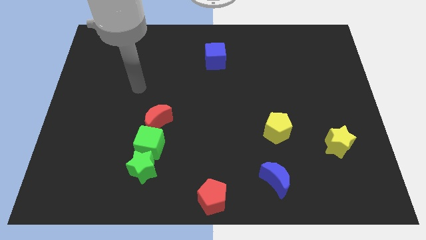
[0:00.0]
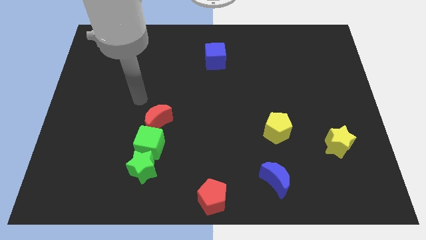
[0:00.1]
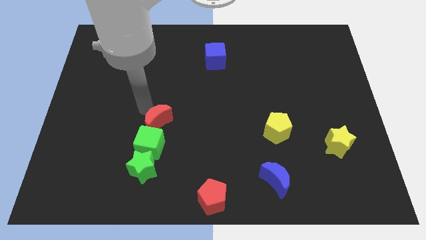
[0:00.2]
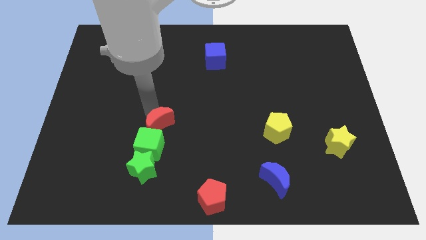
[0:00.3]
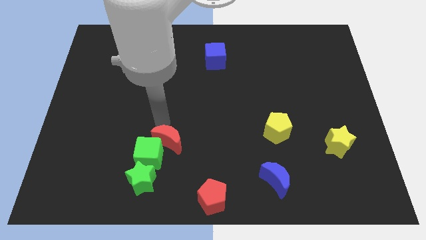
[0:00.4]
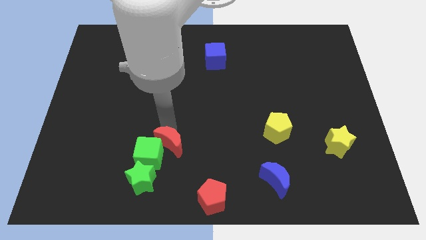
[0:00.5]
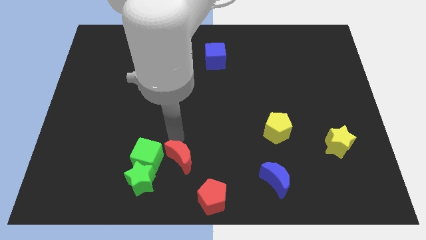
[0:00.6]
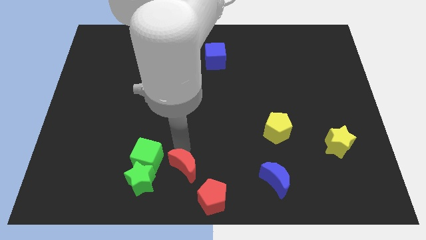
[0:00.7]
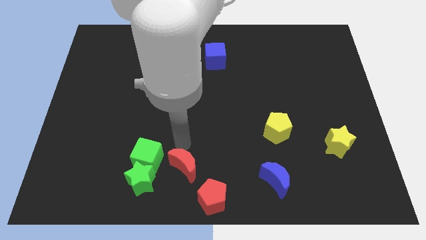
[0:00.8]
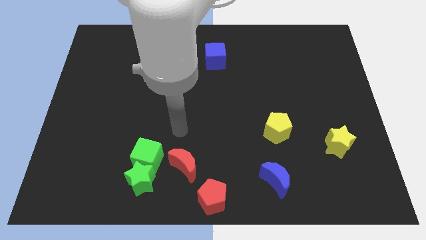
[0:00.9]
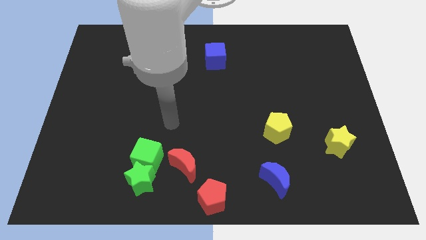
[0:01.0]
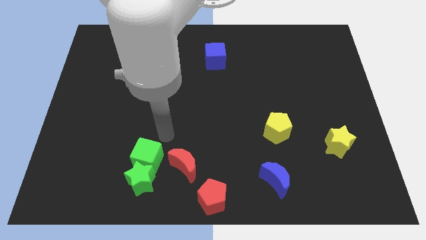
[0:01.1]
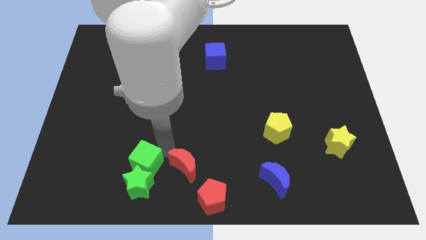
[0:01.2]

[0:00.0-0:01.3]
move two objects with red crescent

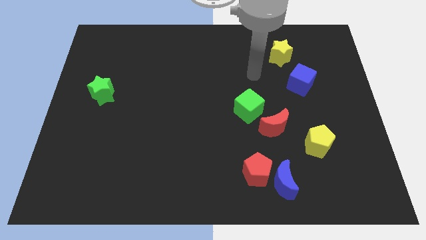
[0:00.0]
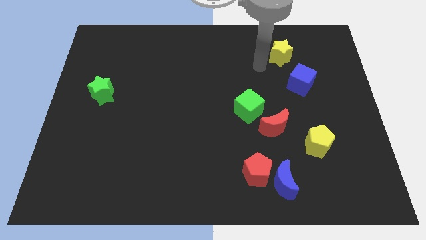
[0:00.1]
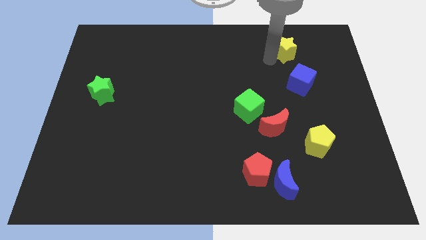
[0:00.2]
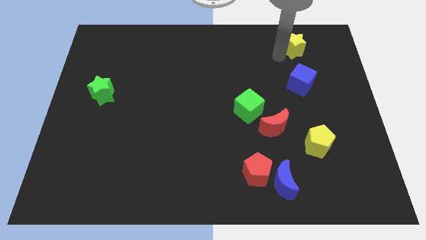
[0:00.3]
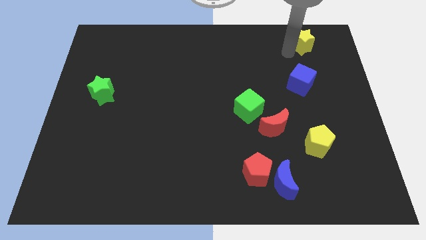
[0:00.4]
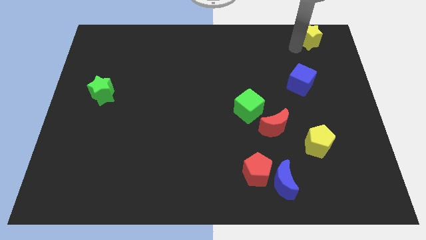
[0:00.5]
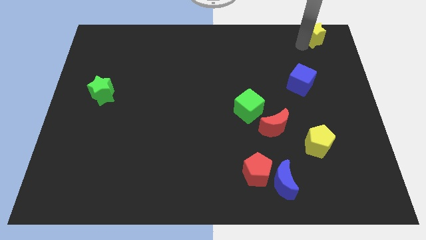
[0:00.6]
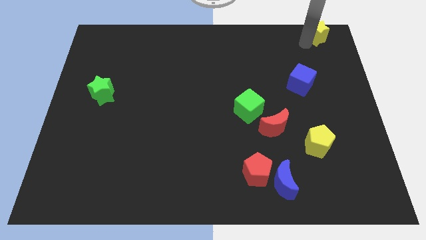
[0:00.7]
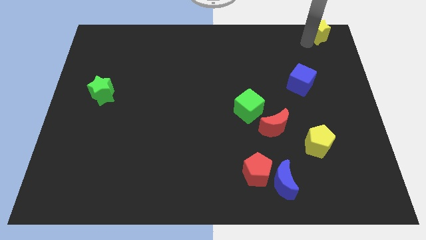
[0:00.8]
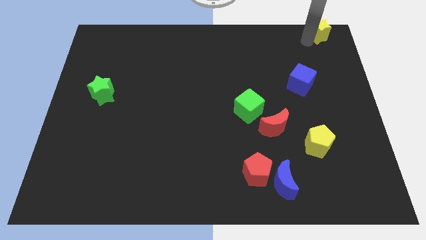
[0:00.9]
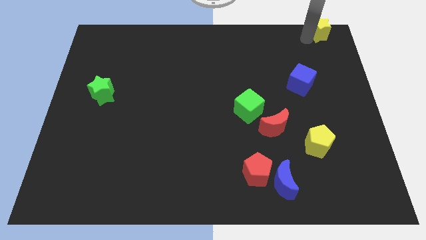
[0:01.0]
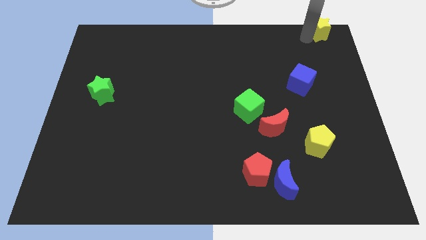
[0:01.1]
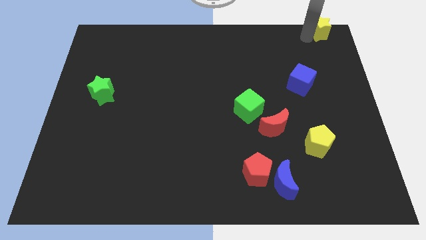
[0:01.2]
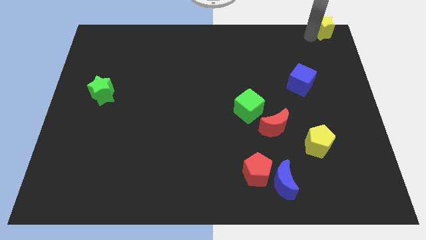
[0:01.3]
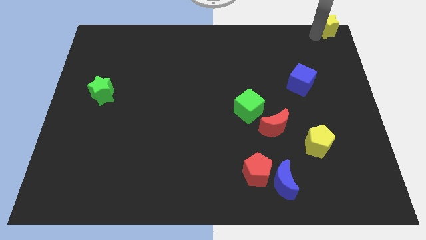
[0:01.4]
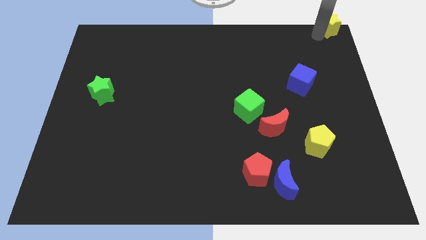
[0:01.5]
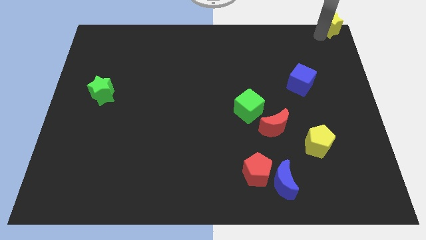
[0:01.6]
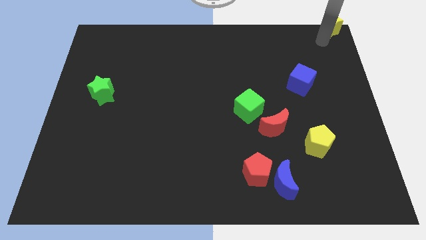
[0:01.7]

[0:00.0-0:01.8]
push the yellow star to the top right

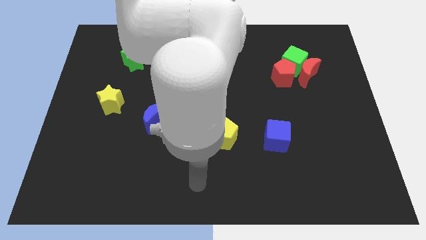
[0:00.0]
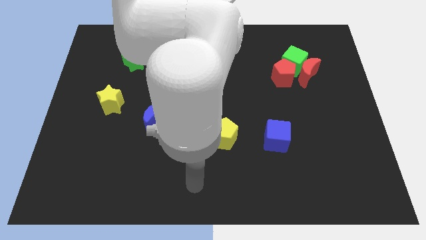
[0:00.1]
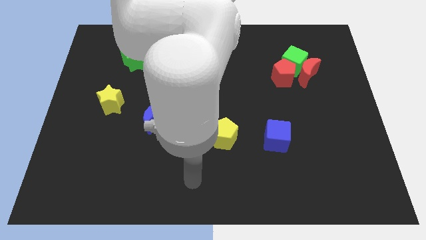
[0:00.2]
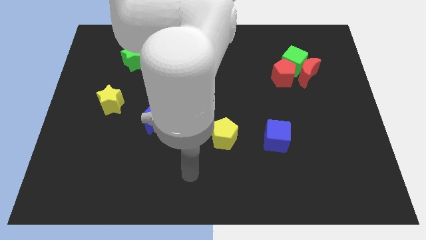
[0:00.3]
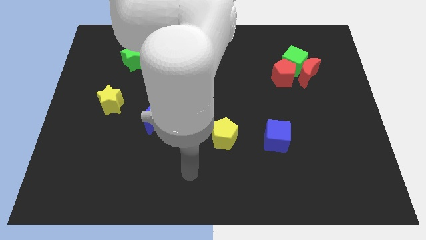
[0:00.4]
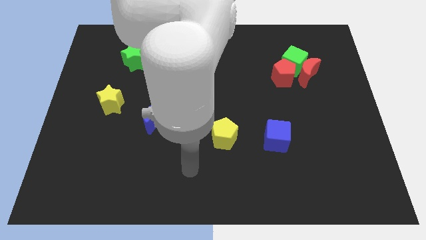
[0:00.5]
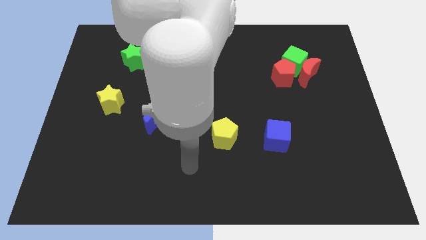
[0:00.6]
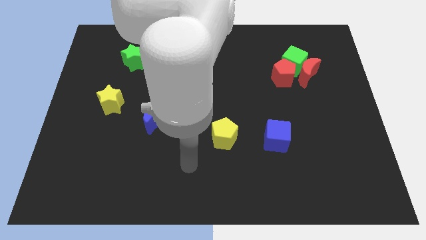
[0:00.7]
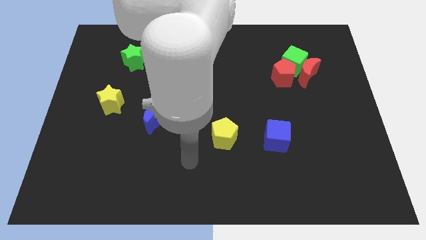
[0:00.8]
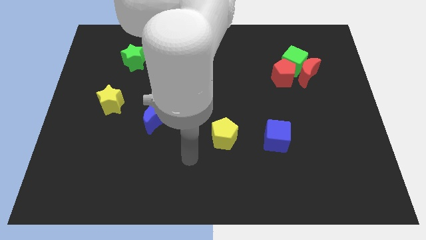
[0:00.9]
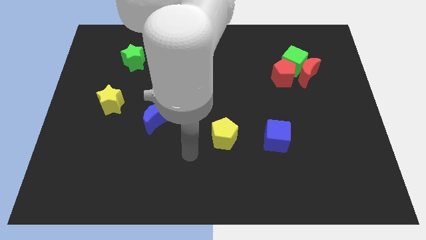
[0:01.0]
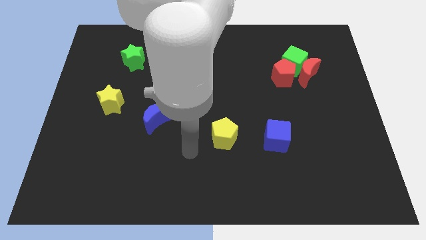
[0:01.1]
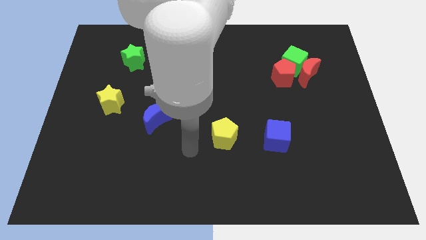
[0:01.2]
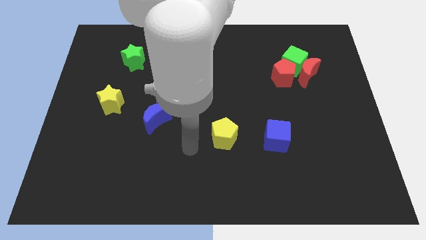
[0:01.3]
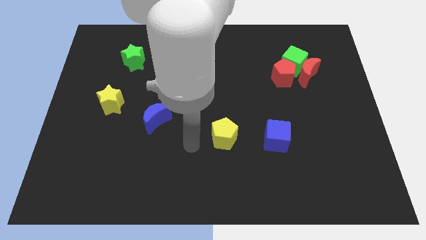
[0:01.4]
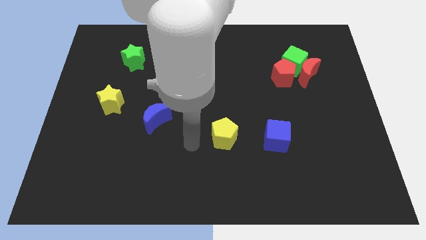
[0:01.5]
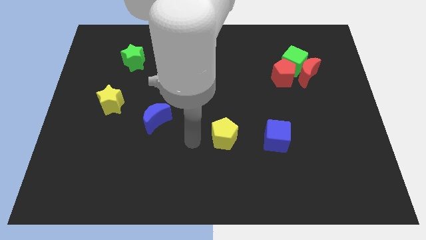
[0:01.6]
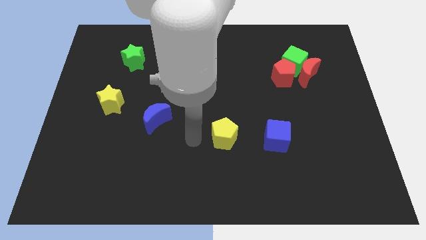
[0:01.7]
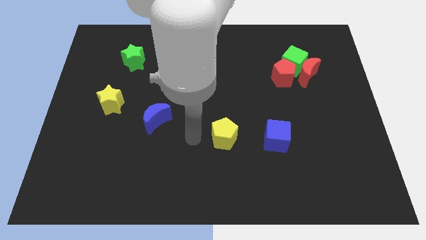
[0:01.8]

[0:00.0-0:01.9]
move your hand close to the left side of the yellow pentagon

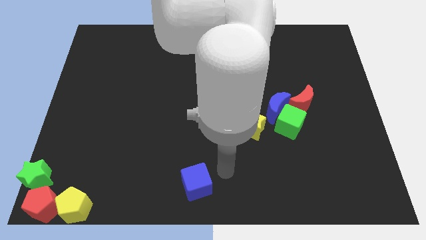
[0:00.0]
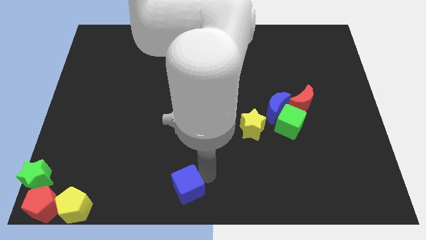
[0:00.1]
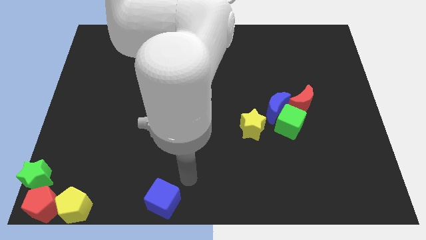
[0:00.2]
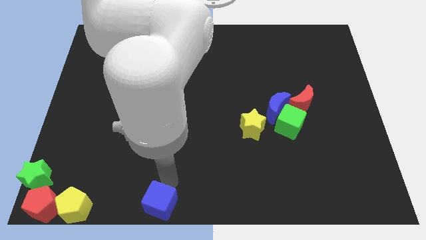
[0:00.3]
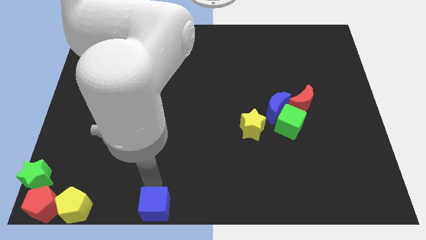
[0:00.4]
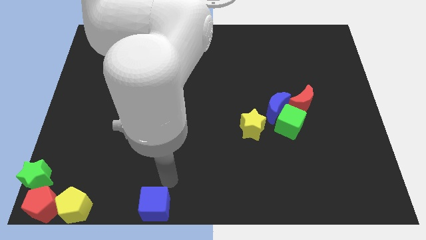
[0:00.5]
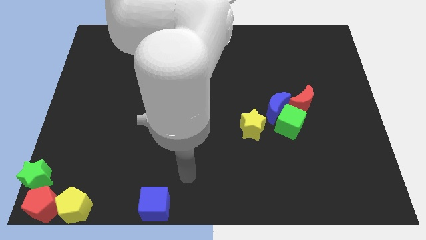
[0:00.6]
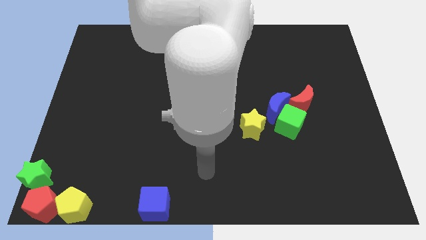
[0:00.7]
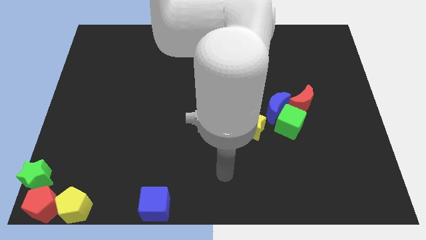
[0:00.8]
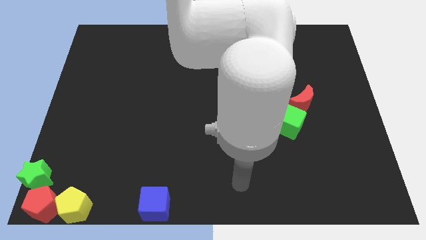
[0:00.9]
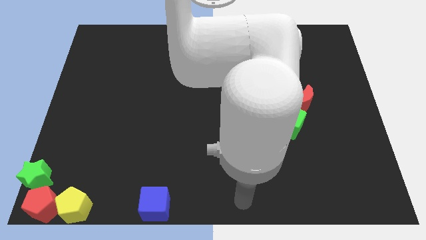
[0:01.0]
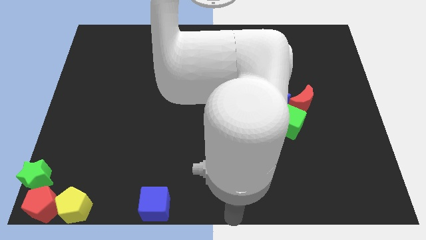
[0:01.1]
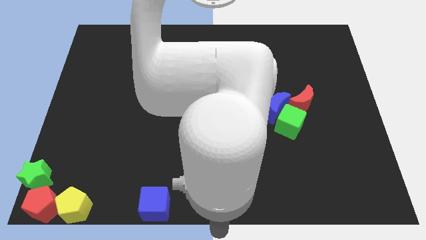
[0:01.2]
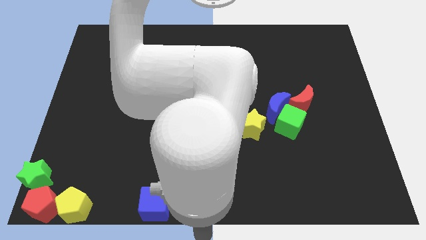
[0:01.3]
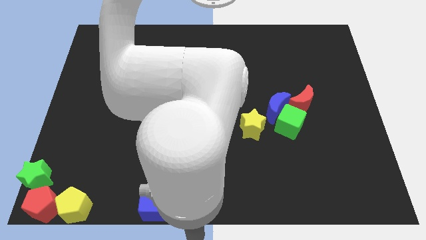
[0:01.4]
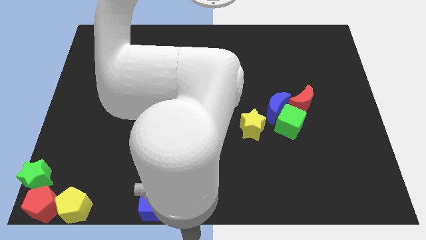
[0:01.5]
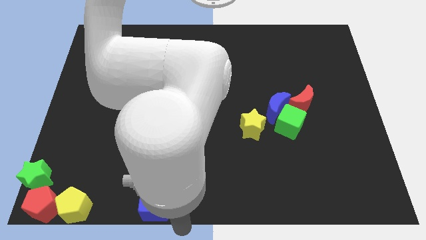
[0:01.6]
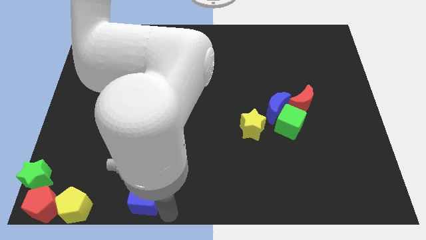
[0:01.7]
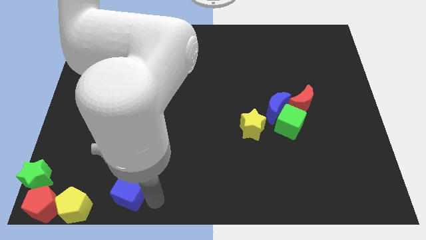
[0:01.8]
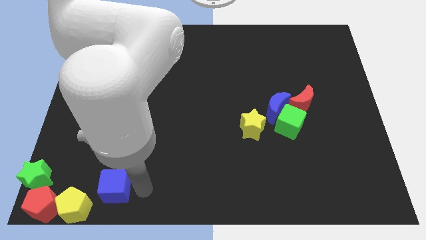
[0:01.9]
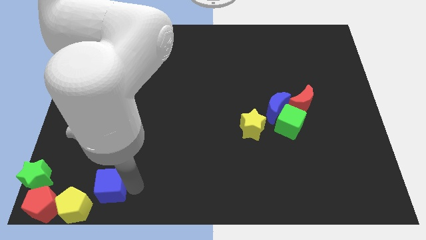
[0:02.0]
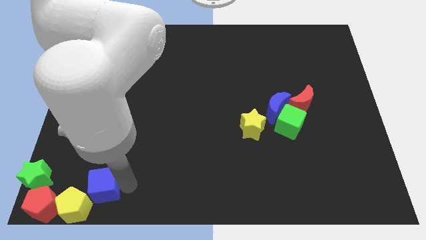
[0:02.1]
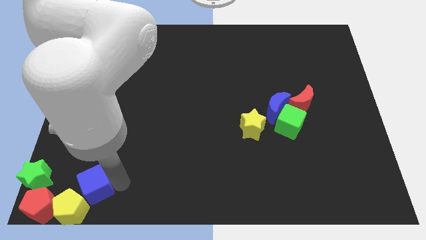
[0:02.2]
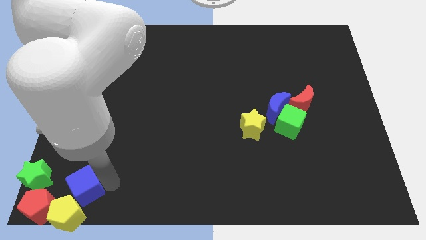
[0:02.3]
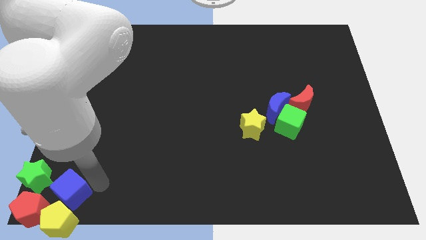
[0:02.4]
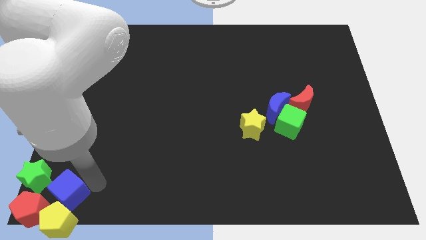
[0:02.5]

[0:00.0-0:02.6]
push the blue cube bottom left corner of the board towards red pentagan

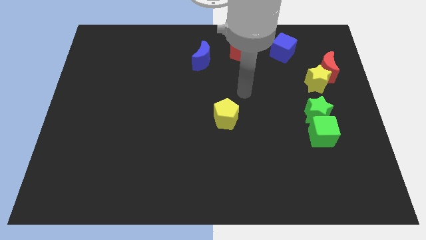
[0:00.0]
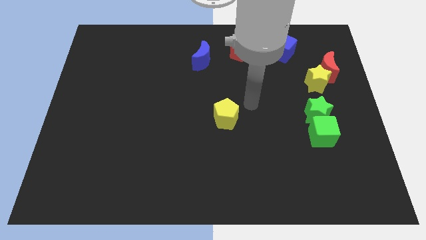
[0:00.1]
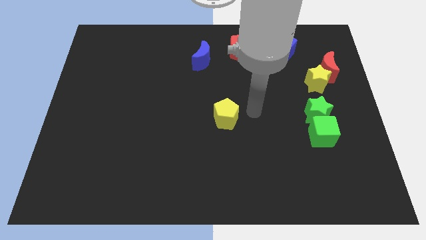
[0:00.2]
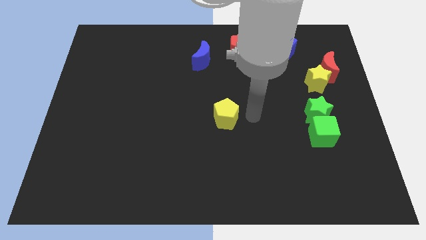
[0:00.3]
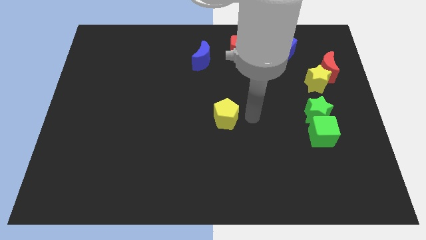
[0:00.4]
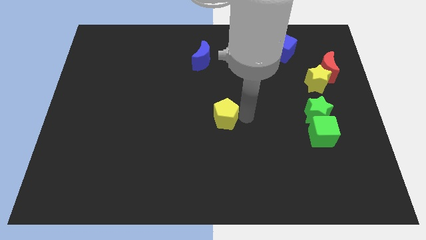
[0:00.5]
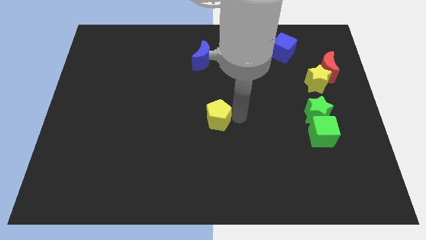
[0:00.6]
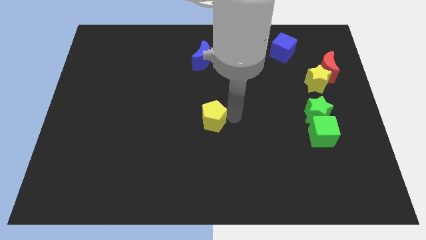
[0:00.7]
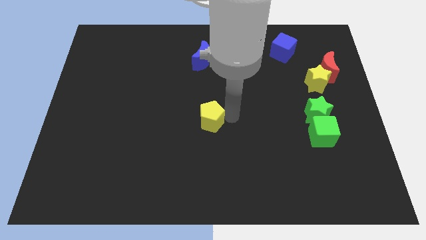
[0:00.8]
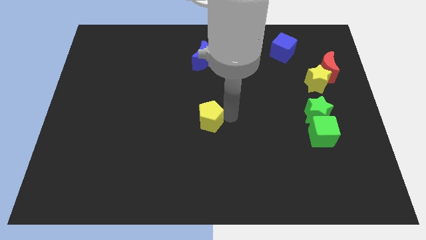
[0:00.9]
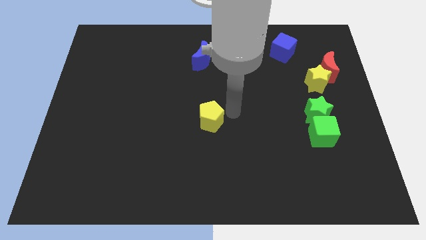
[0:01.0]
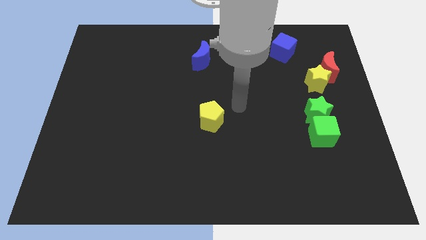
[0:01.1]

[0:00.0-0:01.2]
slide the yellow pentagon to the center of the board

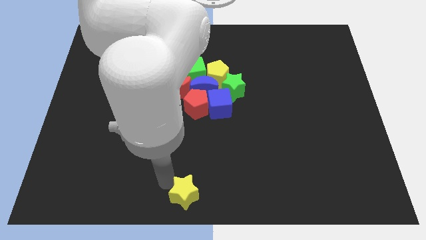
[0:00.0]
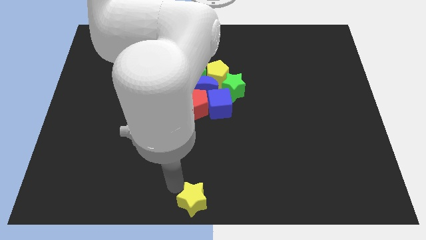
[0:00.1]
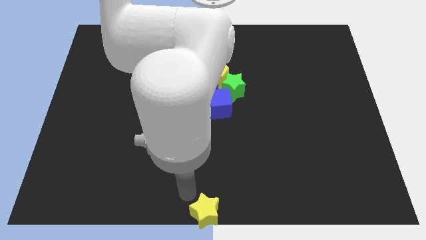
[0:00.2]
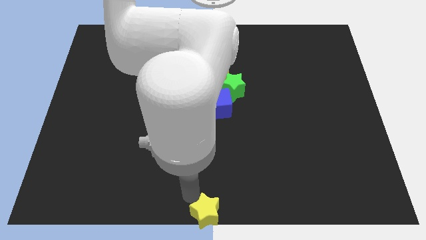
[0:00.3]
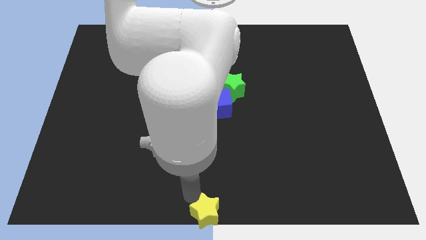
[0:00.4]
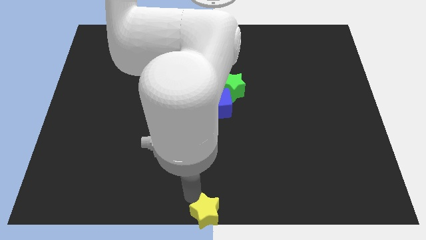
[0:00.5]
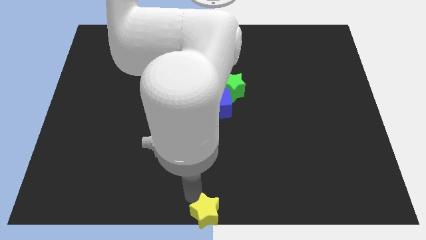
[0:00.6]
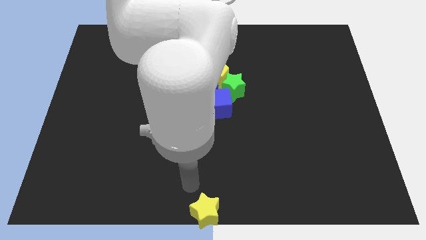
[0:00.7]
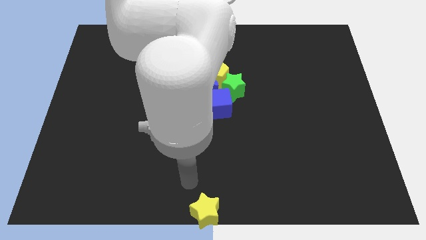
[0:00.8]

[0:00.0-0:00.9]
push the yellow star towards bottom middle of the board
